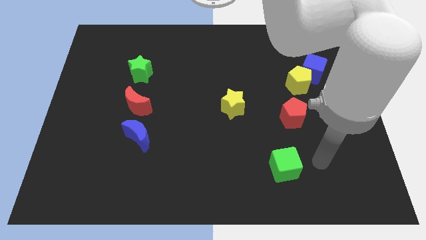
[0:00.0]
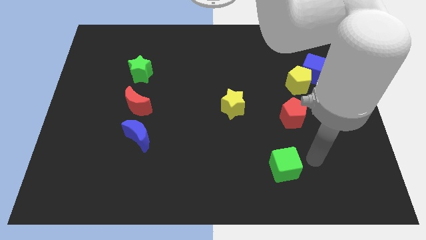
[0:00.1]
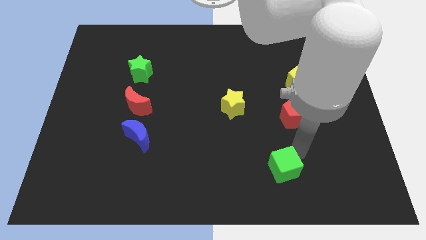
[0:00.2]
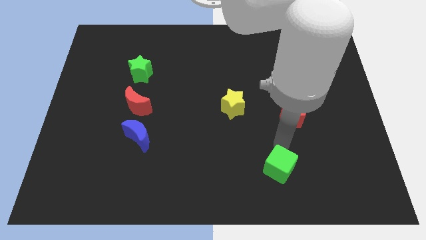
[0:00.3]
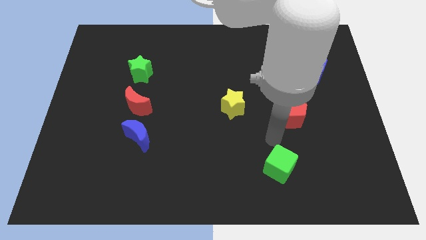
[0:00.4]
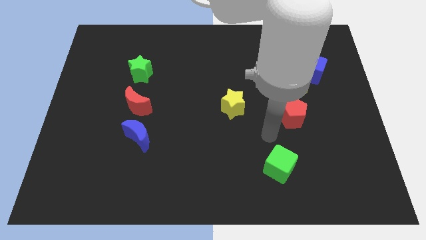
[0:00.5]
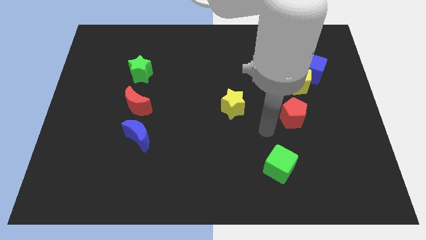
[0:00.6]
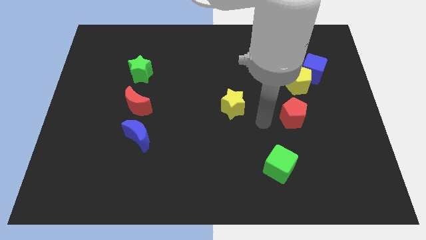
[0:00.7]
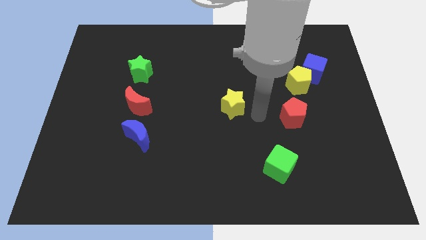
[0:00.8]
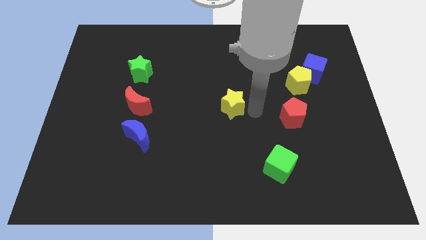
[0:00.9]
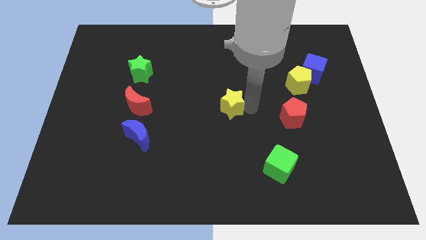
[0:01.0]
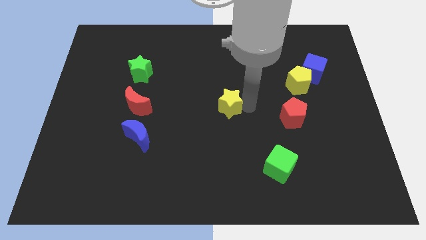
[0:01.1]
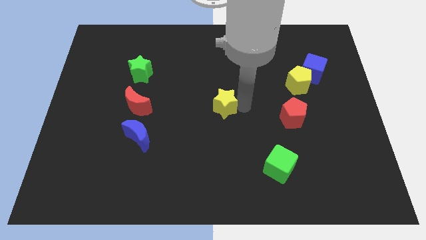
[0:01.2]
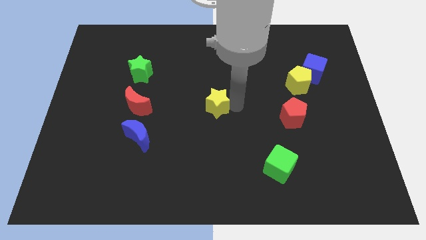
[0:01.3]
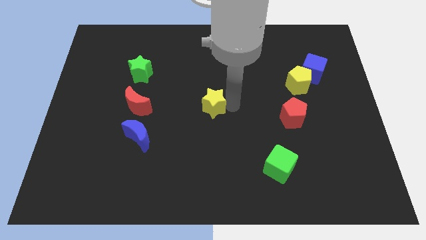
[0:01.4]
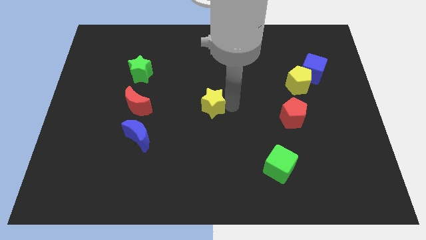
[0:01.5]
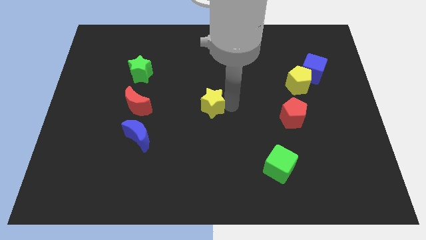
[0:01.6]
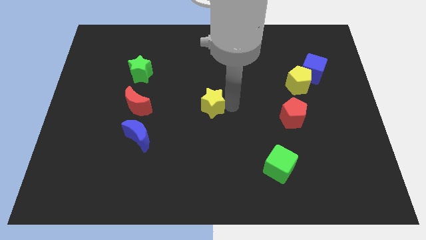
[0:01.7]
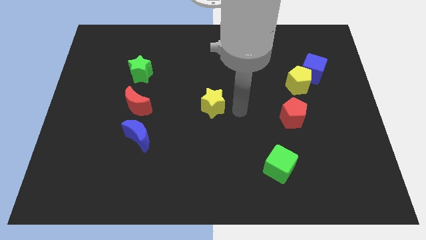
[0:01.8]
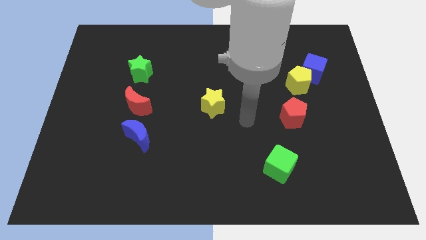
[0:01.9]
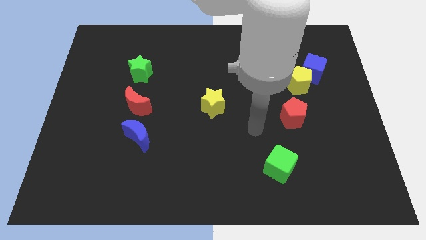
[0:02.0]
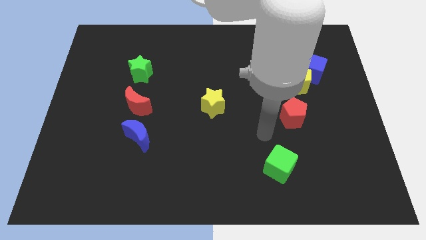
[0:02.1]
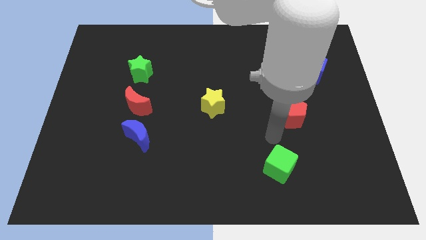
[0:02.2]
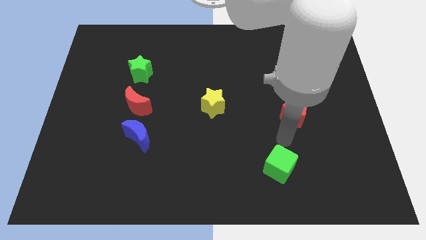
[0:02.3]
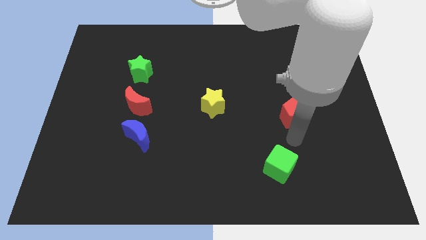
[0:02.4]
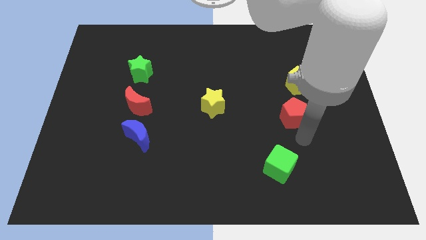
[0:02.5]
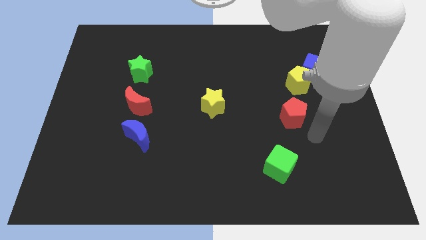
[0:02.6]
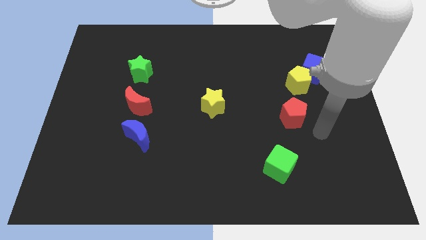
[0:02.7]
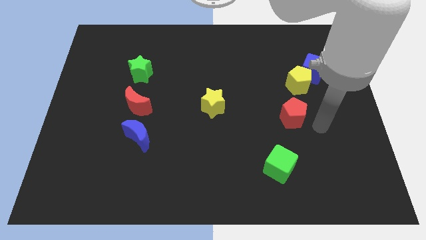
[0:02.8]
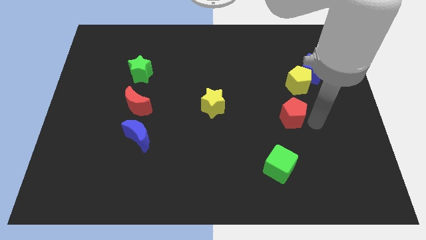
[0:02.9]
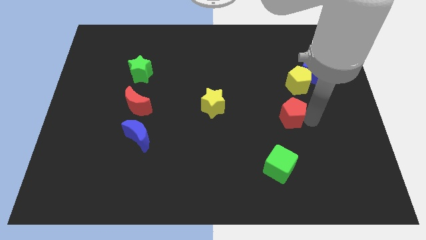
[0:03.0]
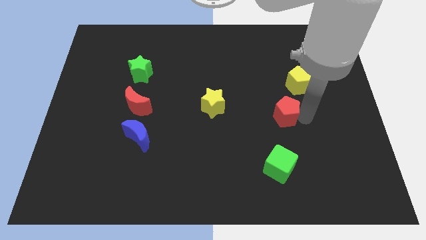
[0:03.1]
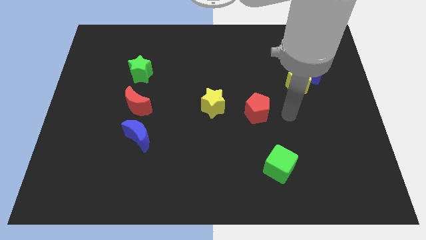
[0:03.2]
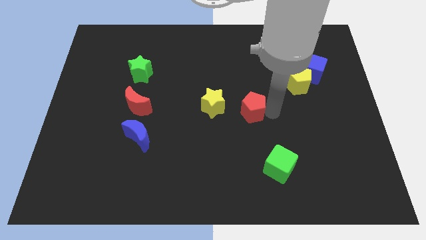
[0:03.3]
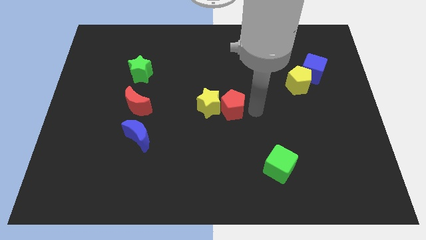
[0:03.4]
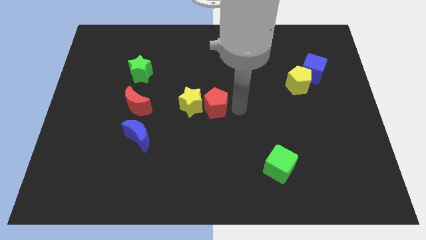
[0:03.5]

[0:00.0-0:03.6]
push the yellow star and red pentagon at the center of the board

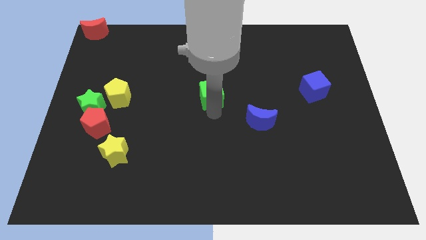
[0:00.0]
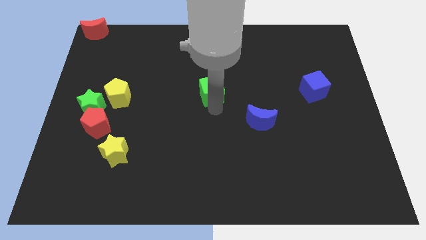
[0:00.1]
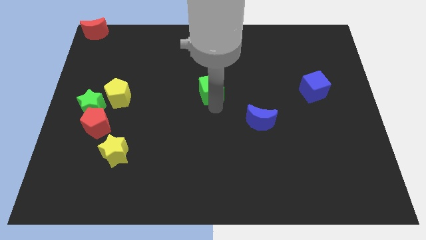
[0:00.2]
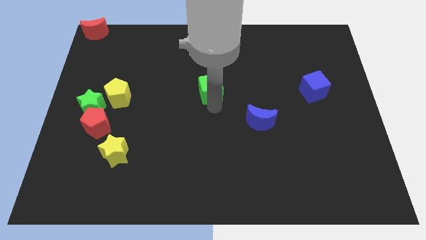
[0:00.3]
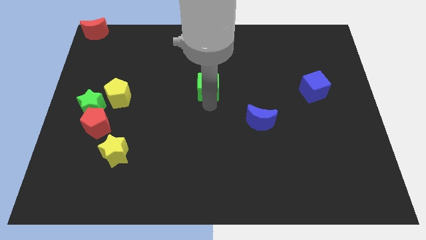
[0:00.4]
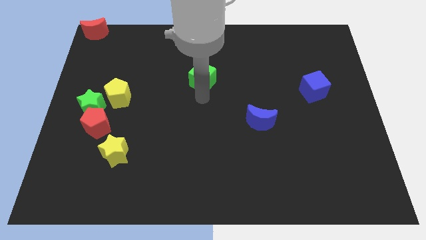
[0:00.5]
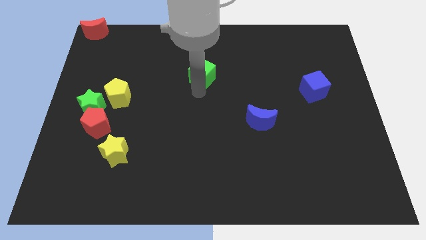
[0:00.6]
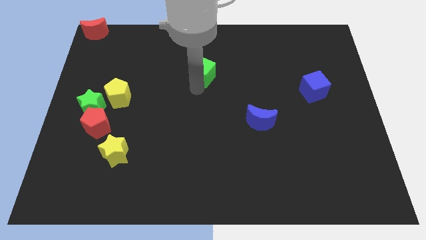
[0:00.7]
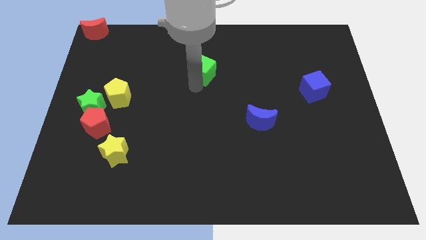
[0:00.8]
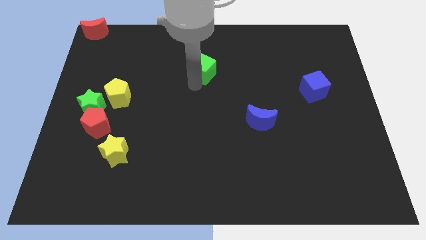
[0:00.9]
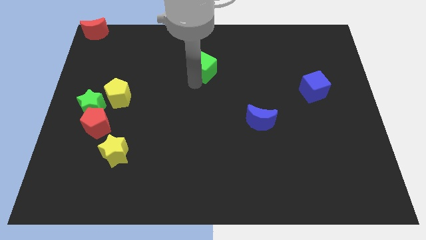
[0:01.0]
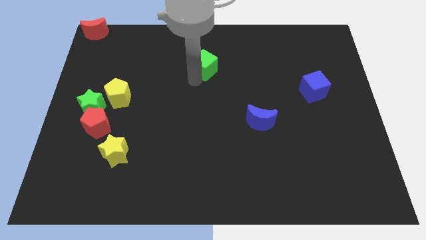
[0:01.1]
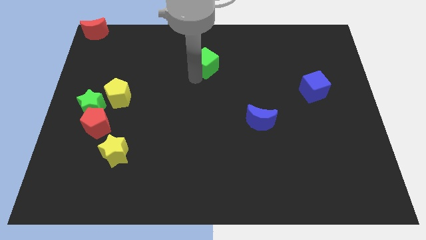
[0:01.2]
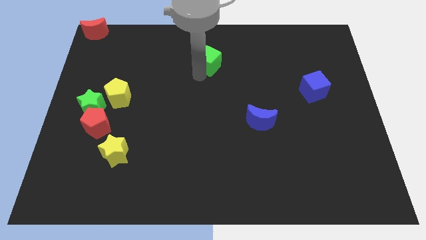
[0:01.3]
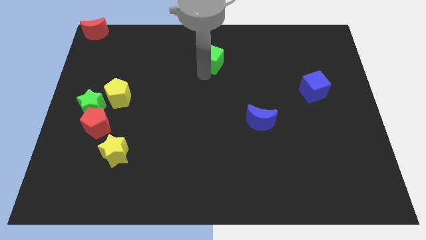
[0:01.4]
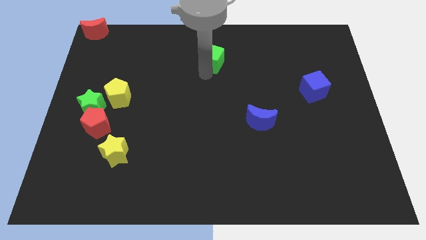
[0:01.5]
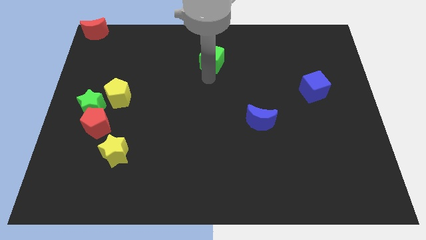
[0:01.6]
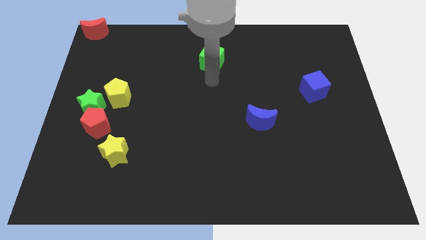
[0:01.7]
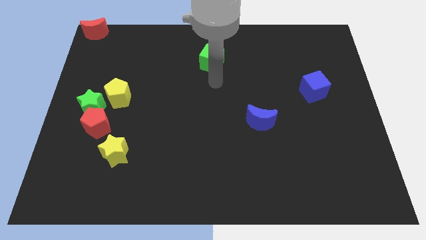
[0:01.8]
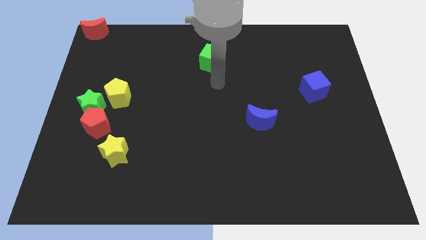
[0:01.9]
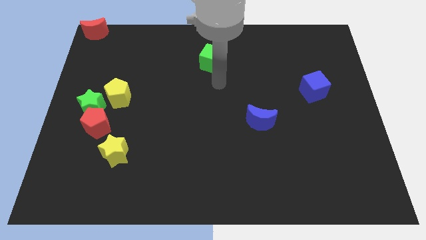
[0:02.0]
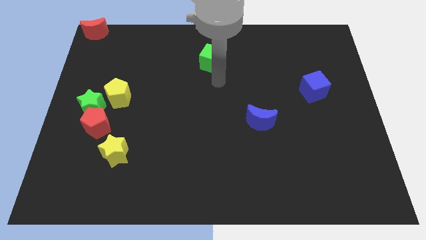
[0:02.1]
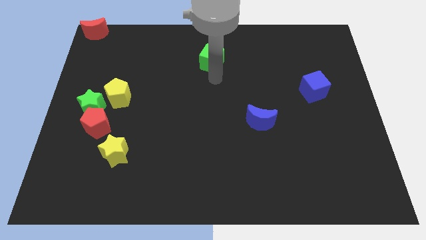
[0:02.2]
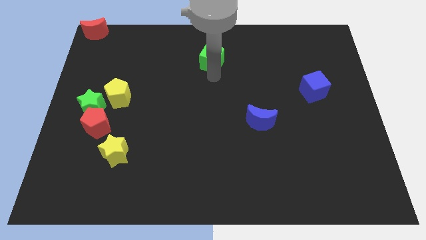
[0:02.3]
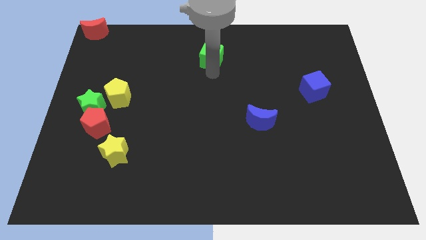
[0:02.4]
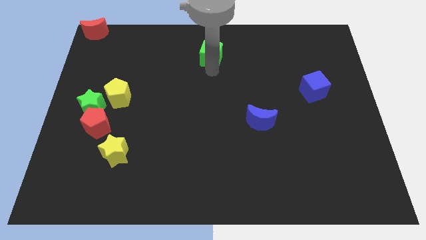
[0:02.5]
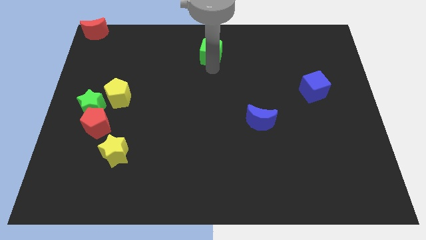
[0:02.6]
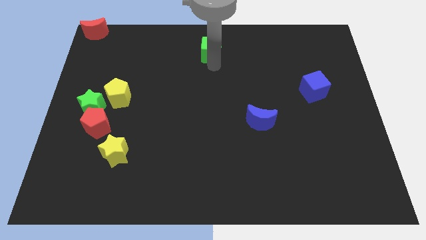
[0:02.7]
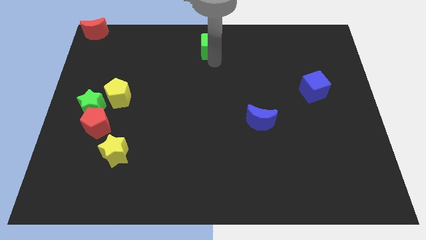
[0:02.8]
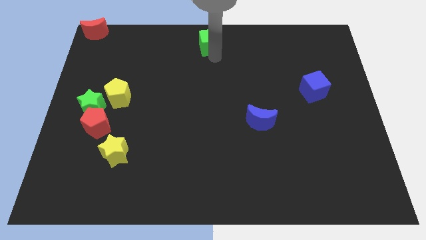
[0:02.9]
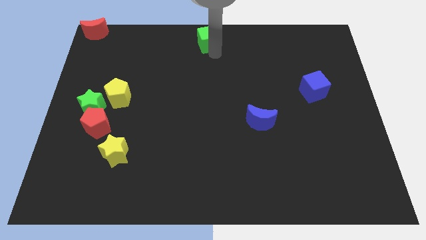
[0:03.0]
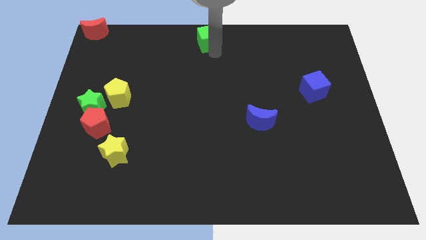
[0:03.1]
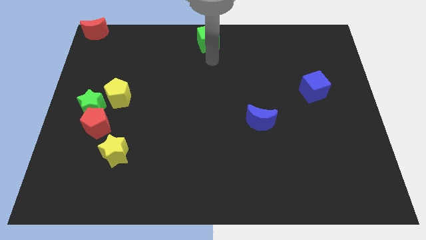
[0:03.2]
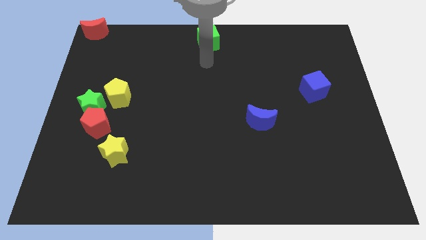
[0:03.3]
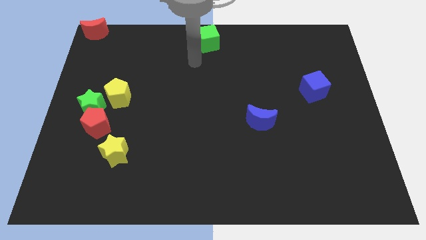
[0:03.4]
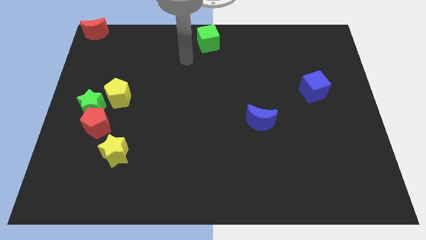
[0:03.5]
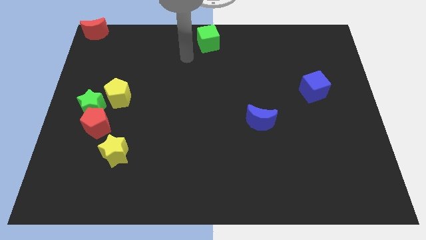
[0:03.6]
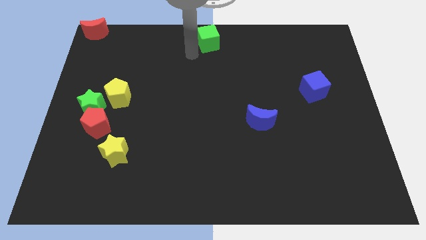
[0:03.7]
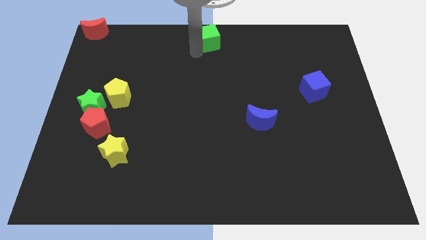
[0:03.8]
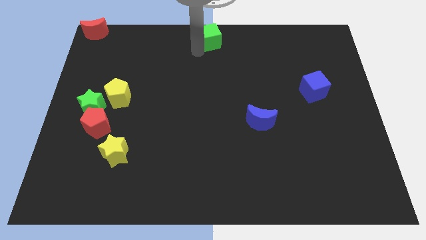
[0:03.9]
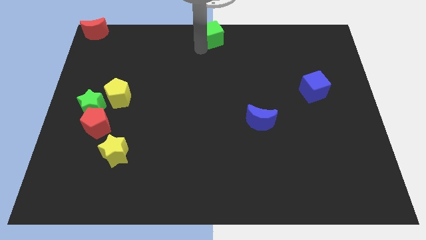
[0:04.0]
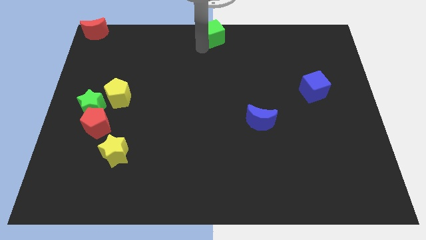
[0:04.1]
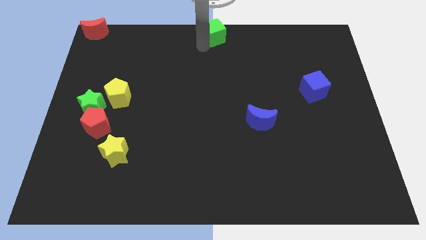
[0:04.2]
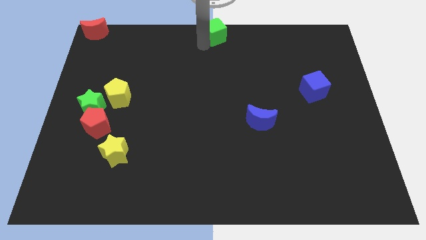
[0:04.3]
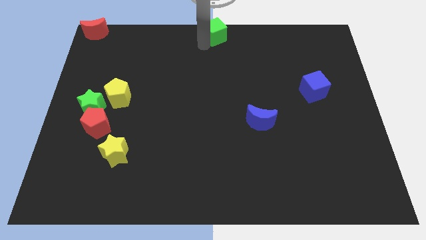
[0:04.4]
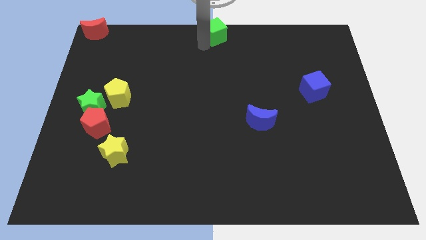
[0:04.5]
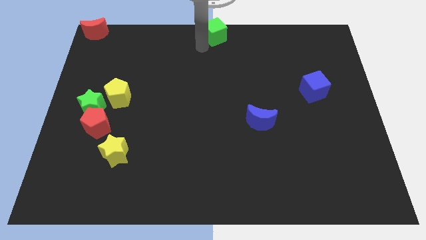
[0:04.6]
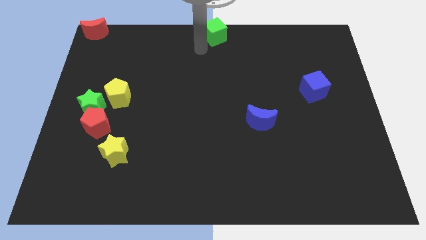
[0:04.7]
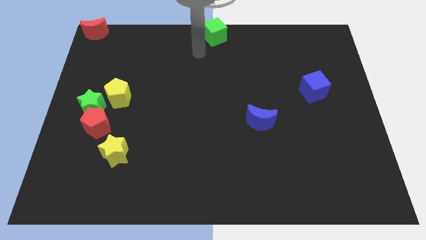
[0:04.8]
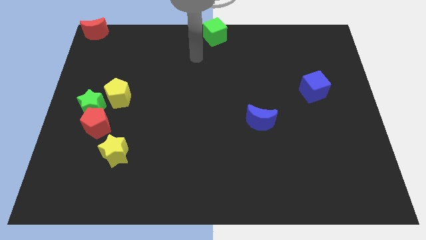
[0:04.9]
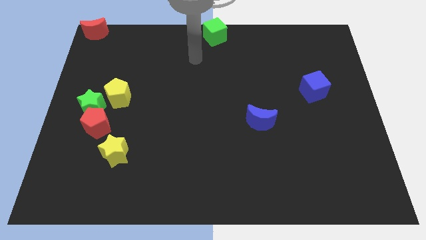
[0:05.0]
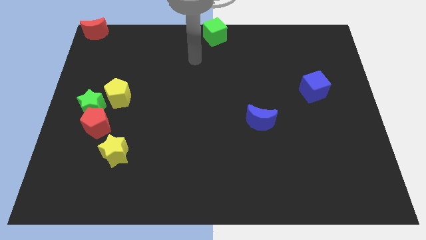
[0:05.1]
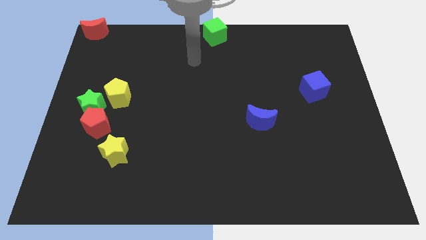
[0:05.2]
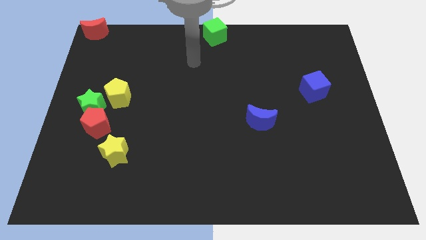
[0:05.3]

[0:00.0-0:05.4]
move the green cube to the top center of the board
